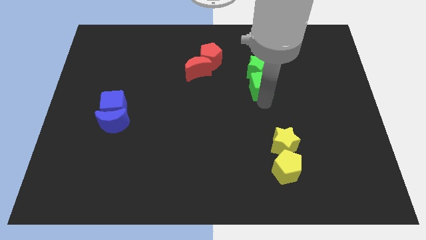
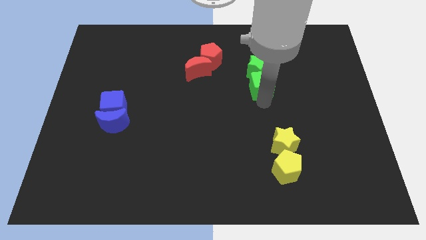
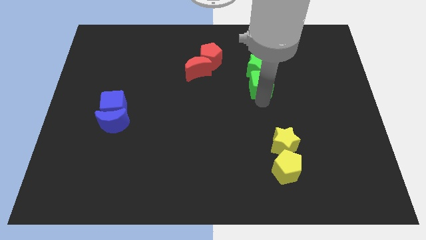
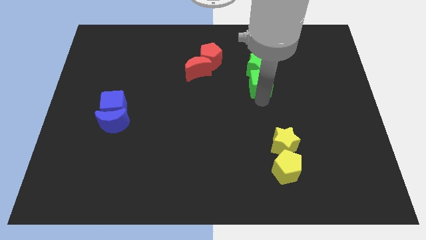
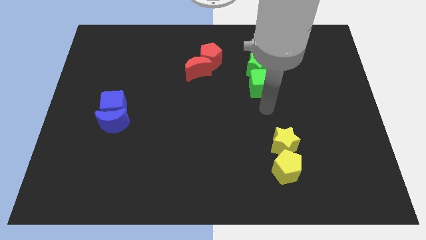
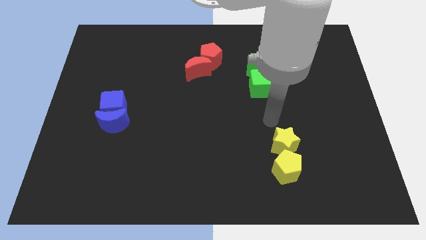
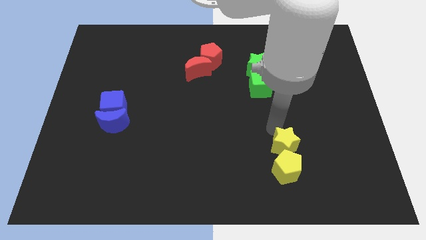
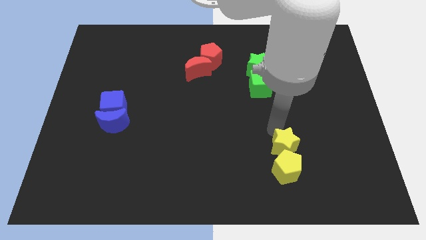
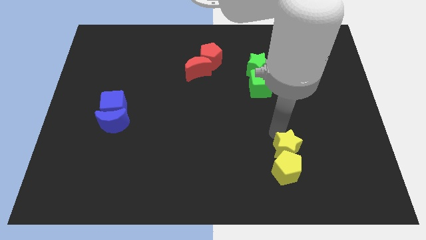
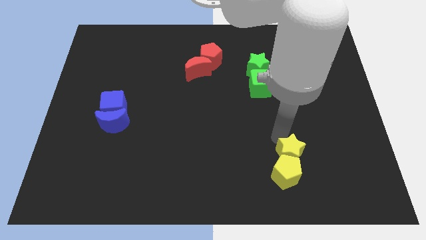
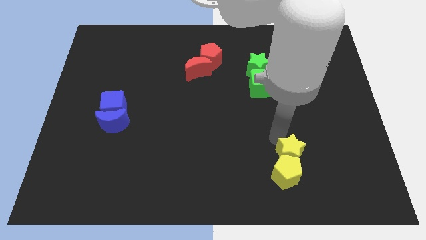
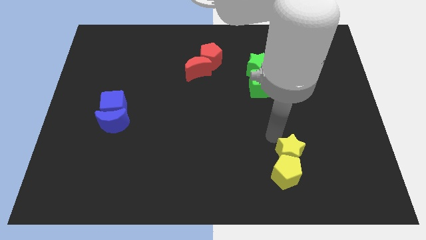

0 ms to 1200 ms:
touch the yellow star with your arm

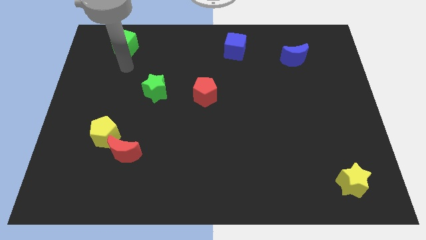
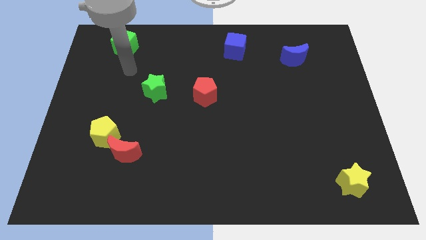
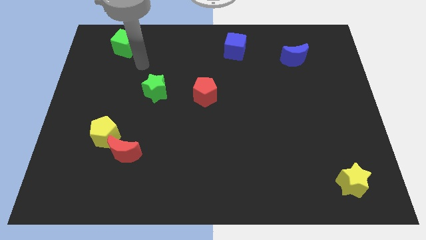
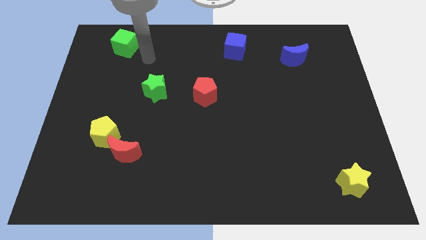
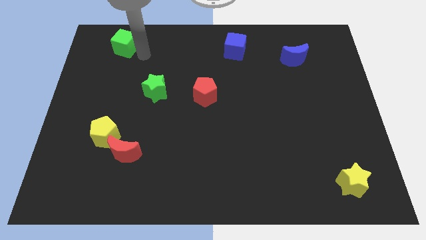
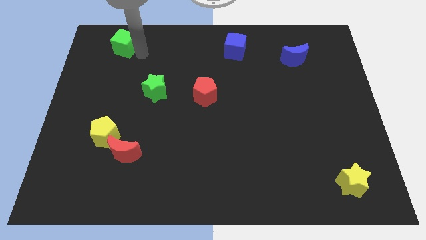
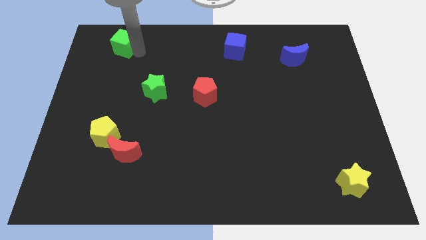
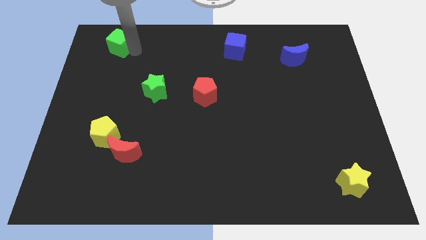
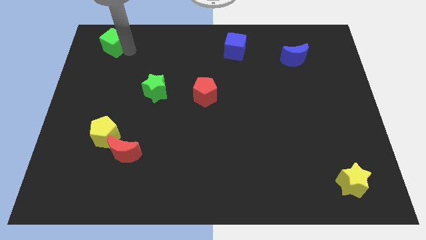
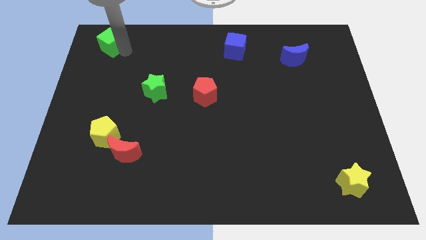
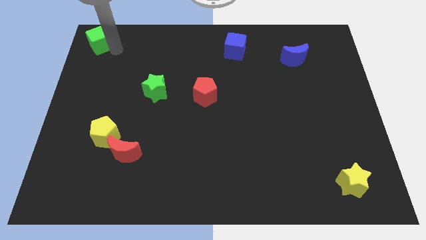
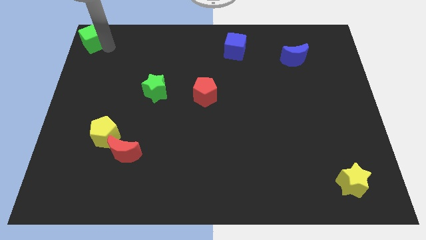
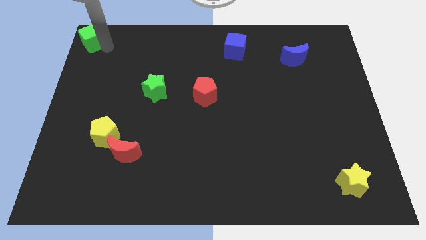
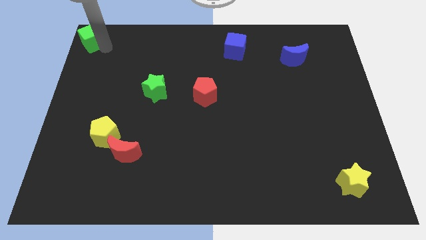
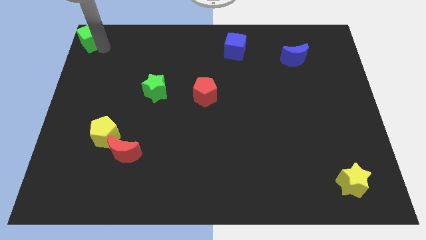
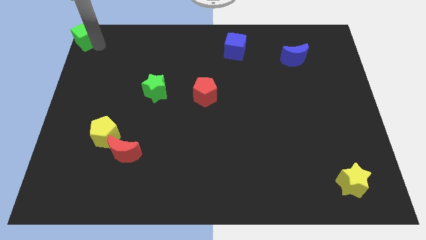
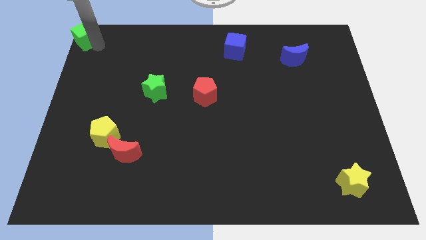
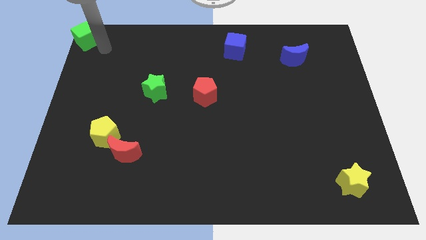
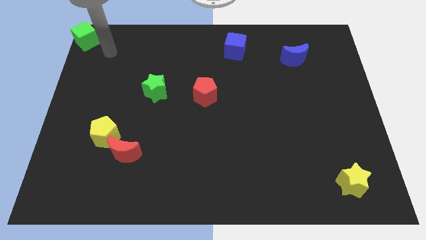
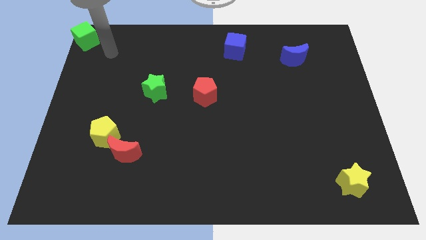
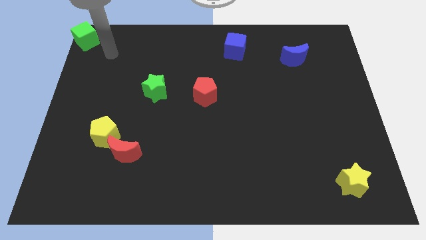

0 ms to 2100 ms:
place the green cube at the top left corner of the board

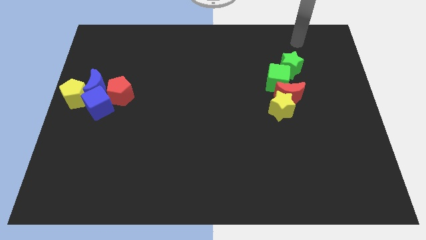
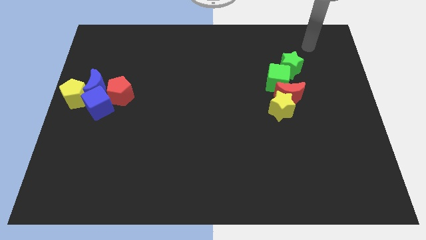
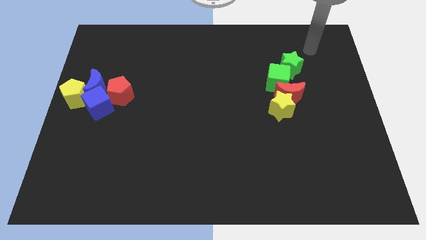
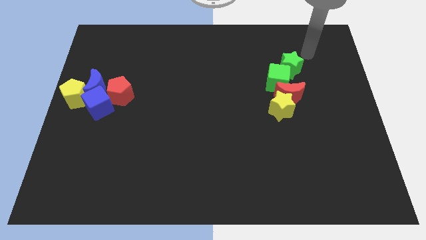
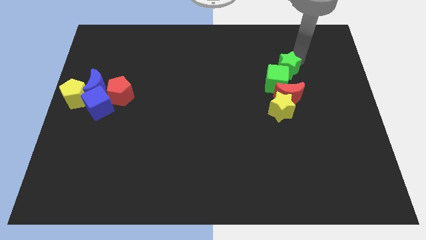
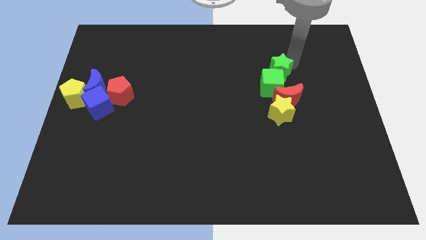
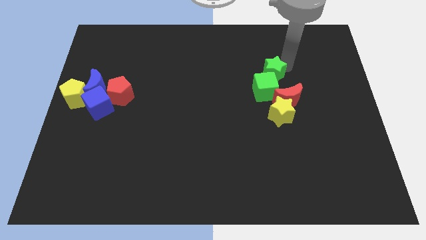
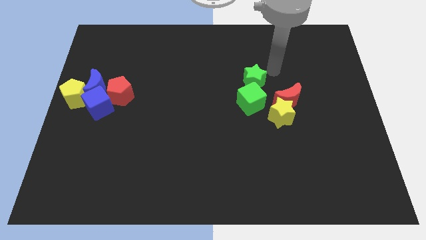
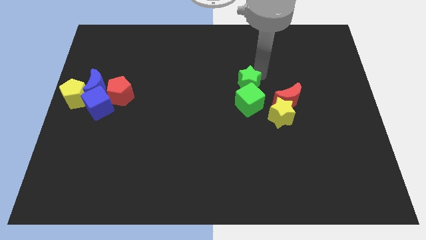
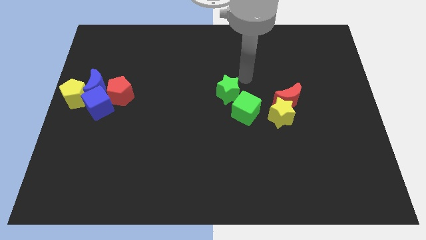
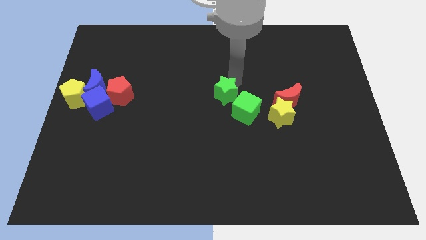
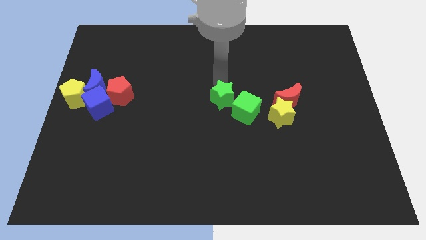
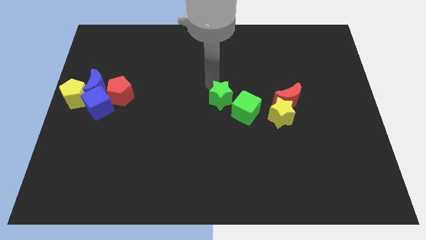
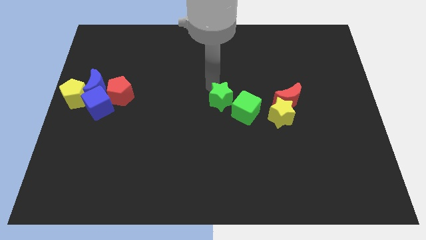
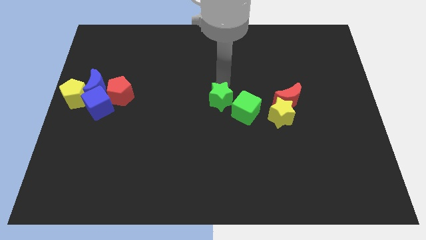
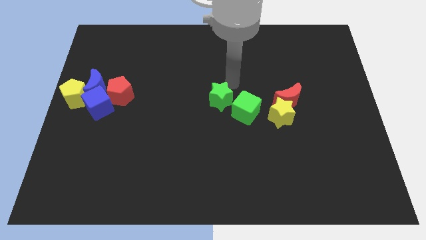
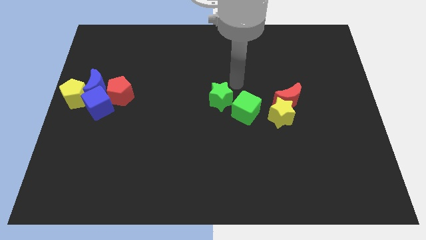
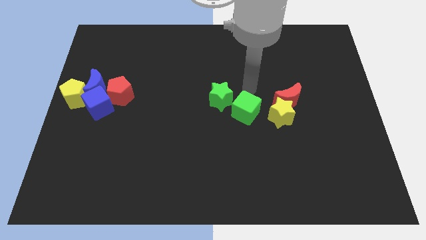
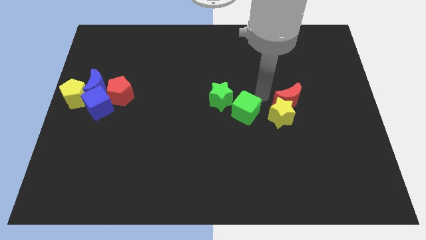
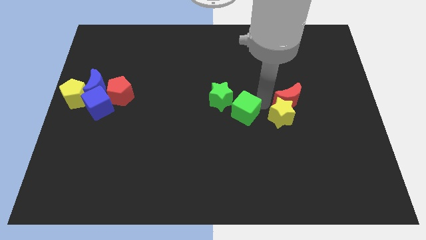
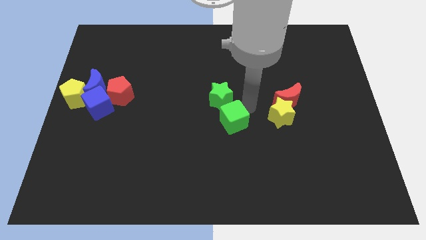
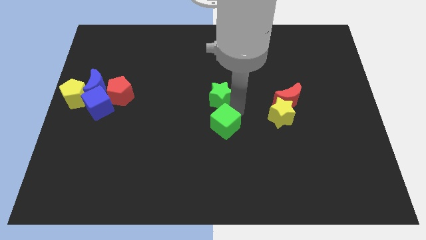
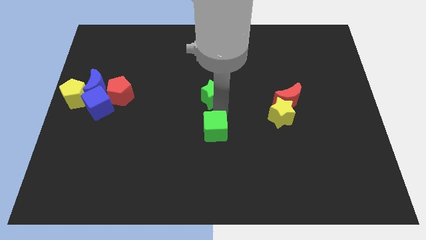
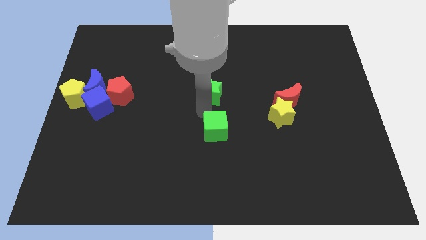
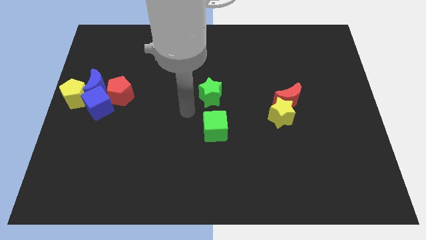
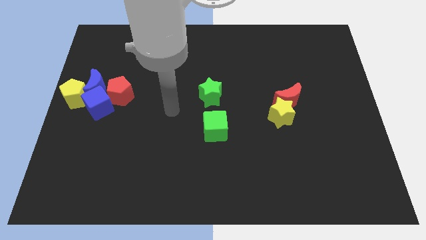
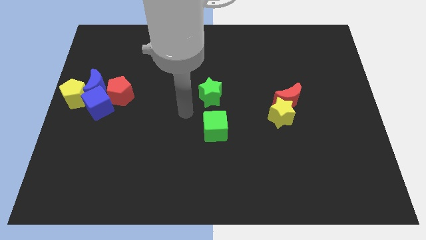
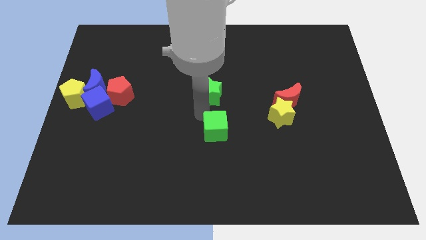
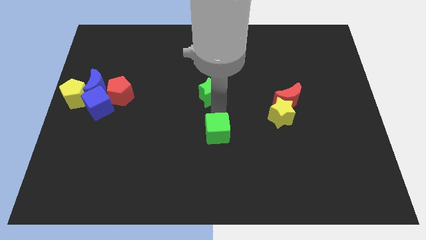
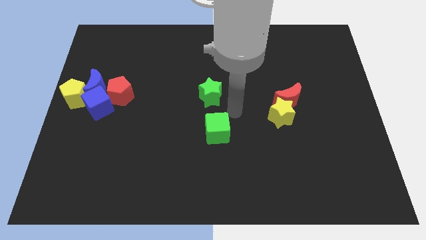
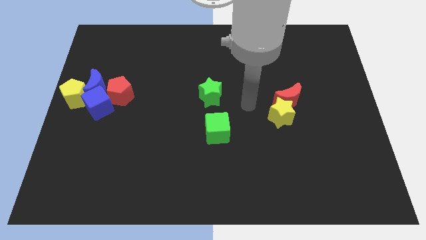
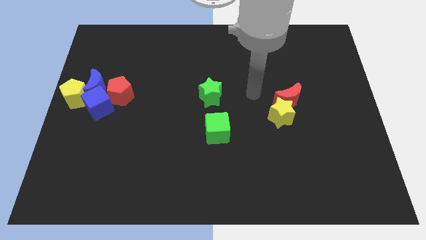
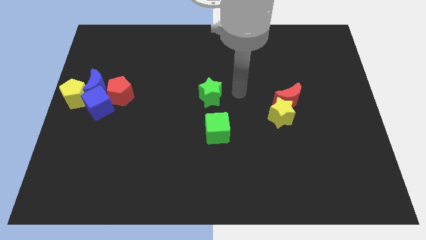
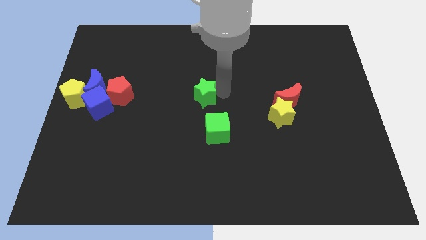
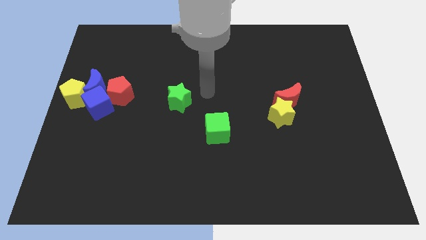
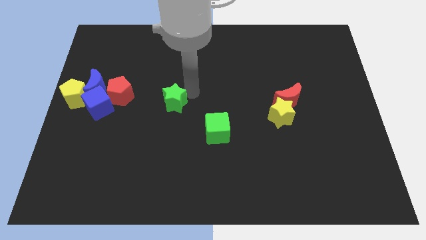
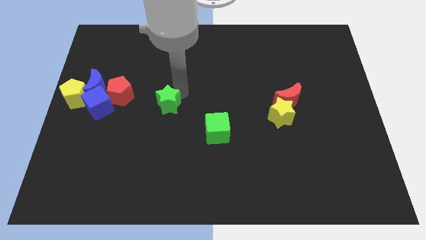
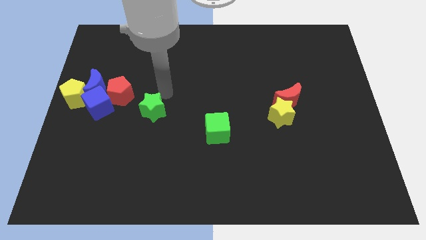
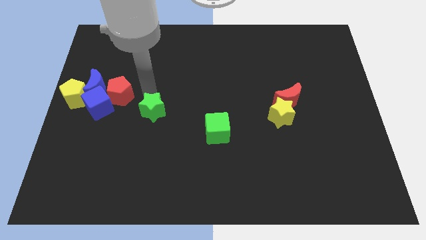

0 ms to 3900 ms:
push the green star towards the left side of the board

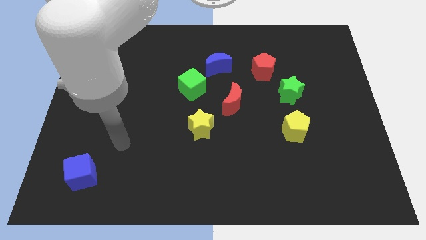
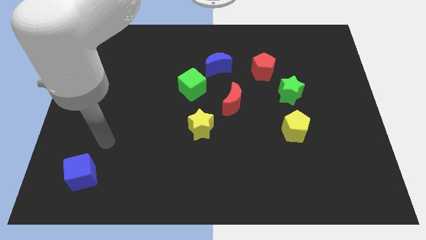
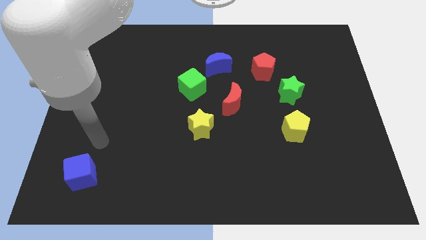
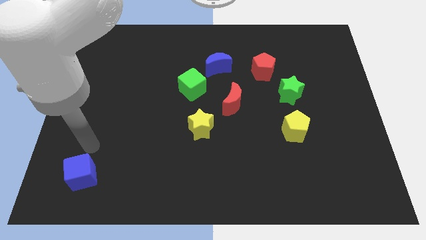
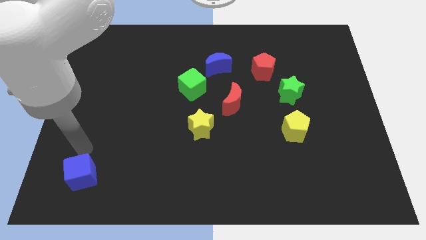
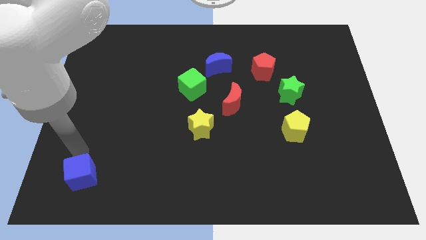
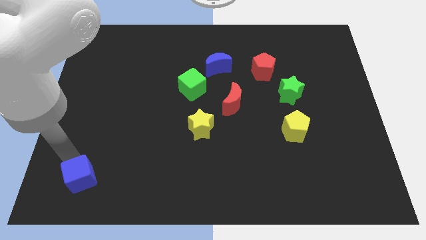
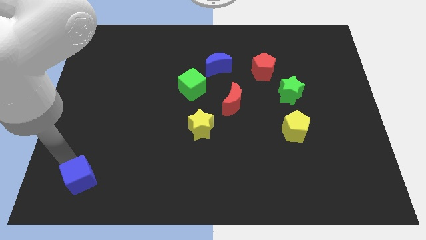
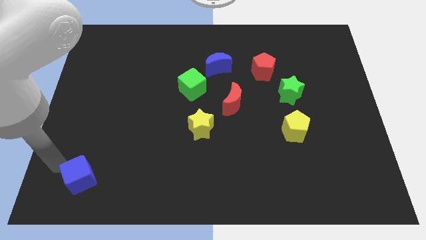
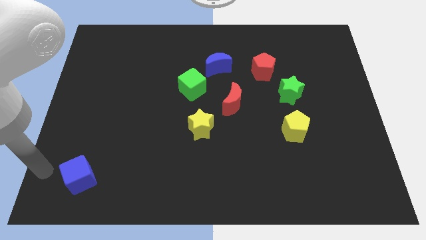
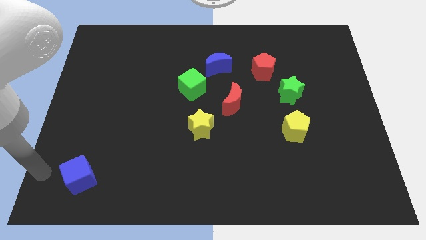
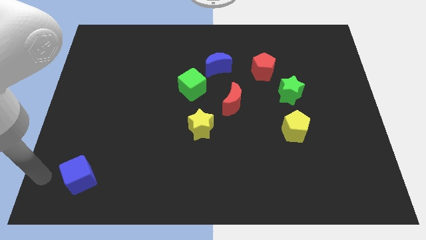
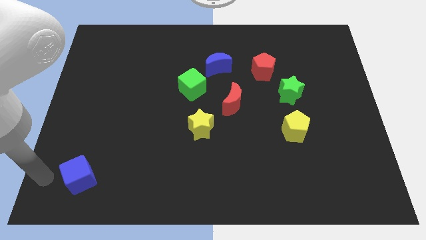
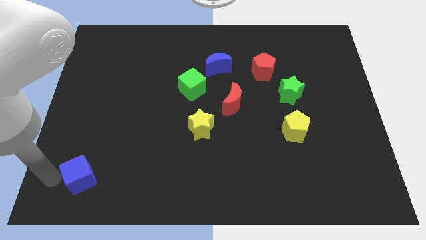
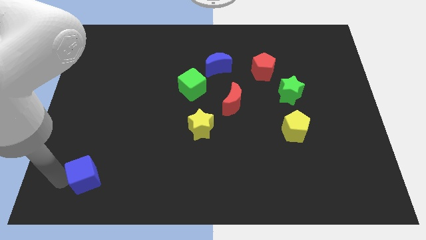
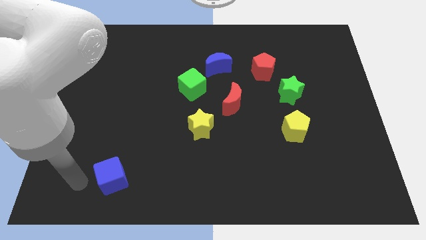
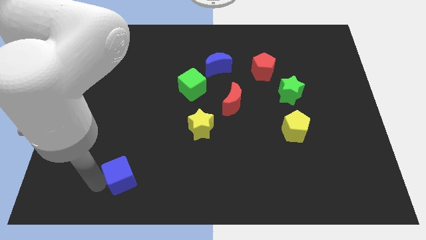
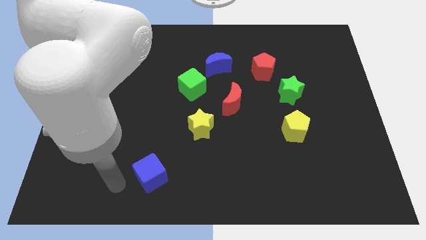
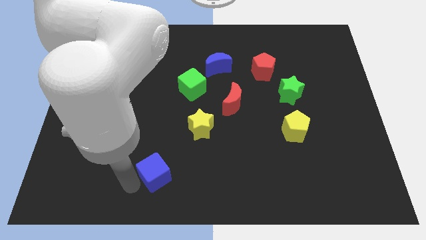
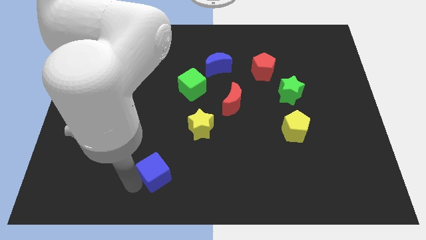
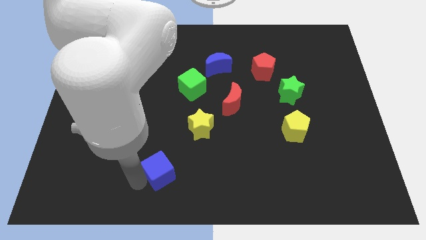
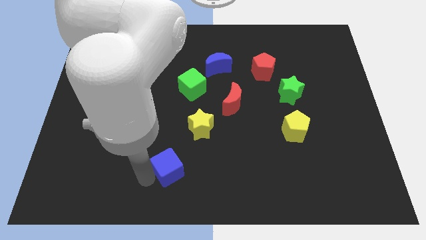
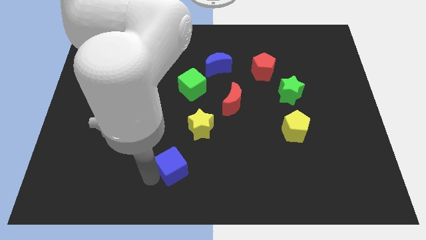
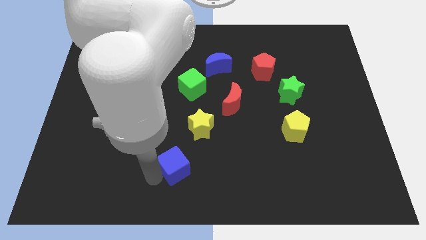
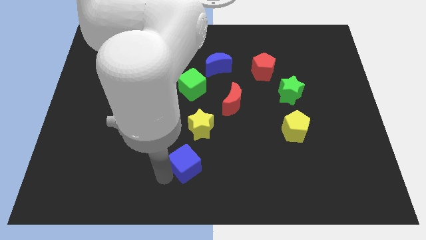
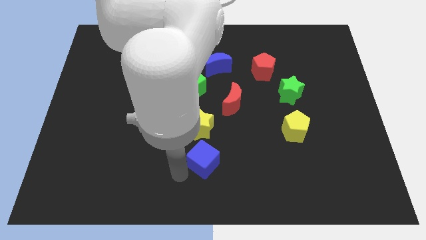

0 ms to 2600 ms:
place blue cube to the bottom of yellow star
